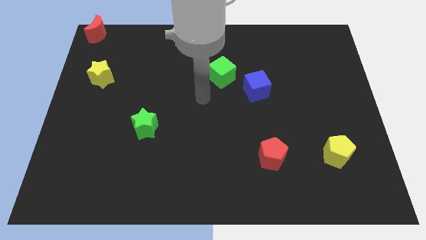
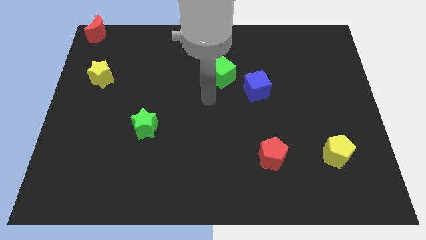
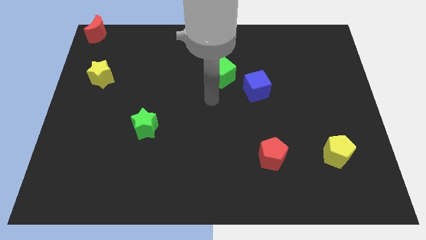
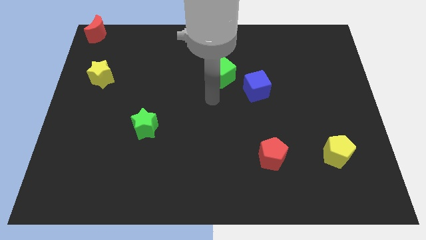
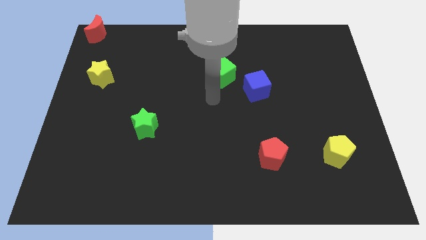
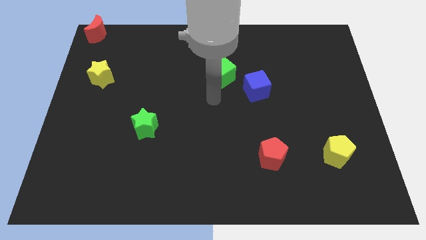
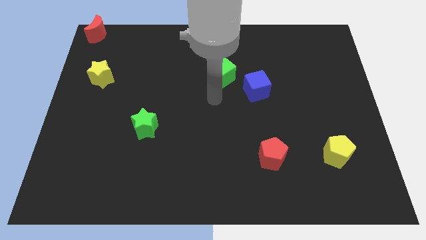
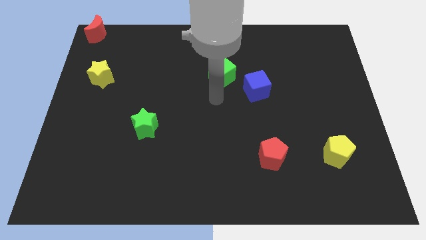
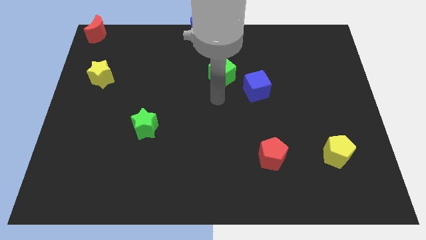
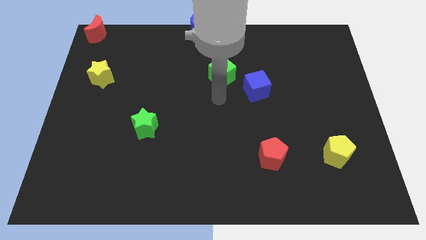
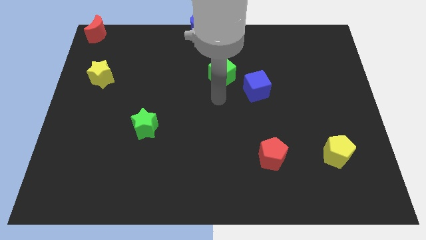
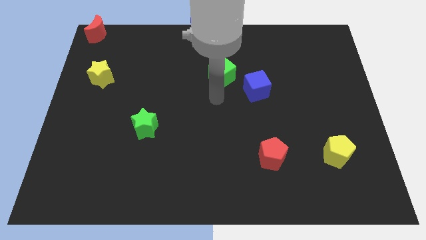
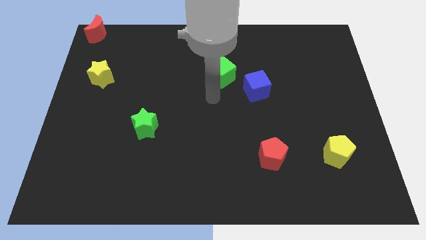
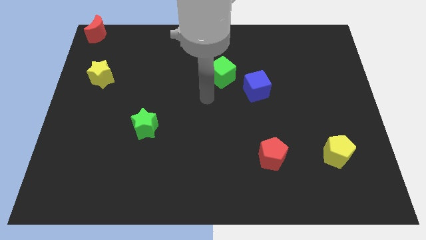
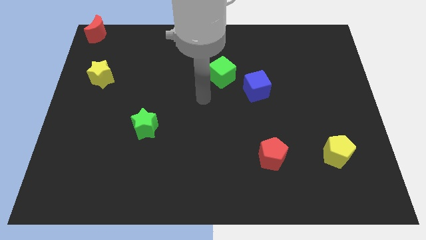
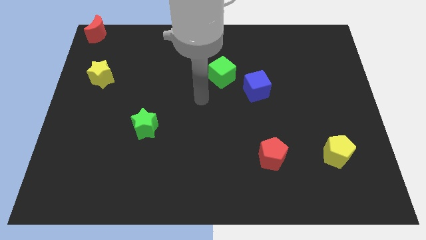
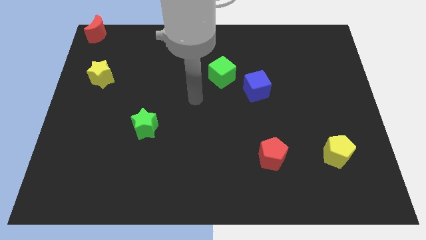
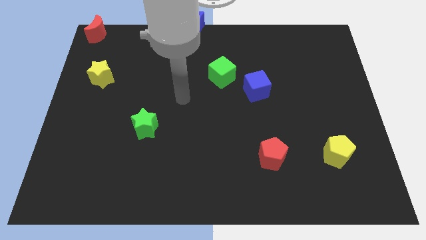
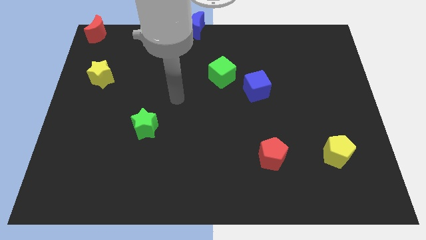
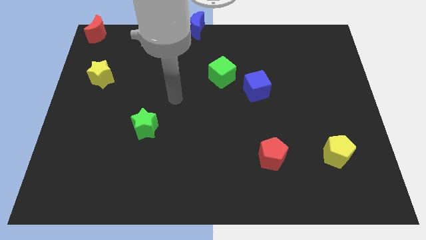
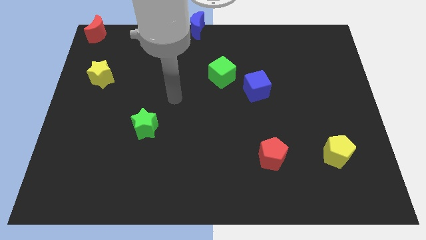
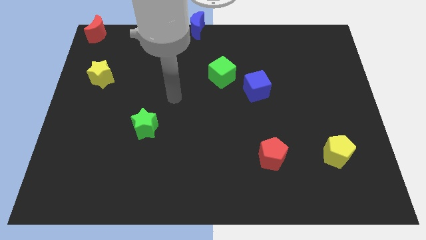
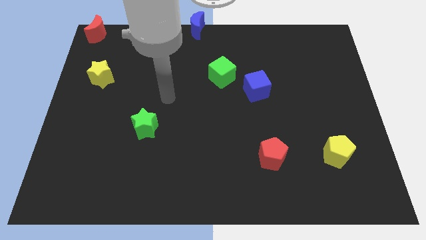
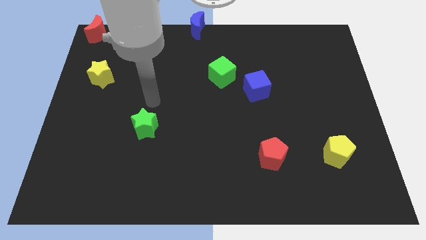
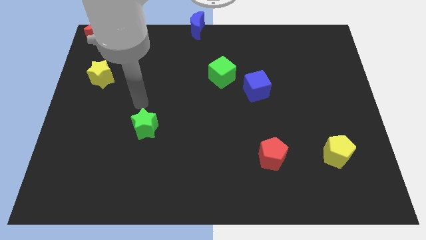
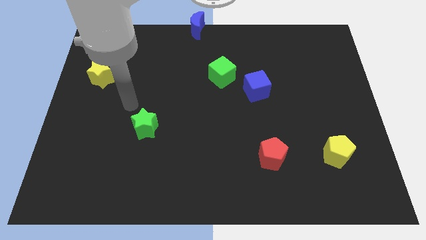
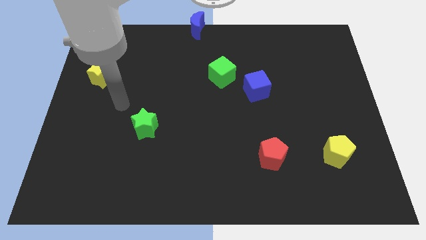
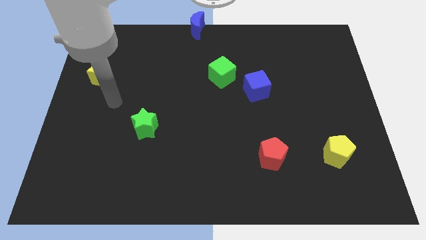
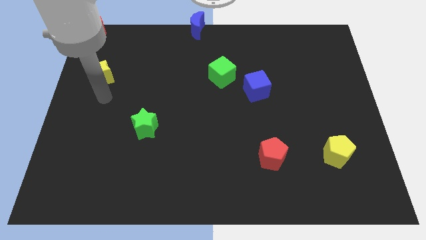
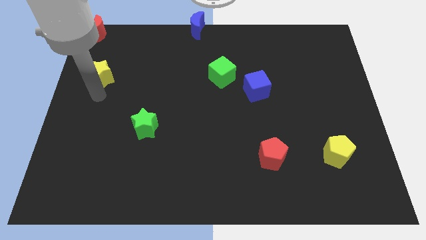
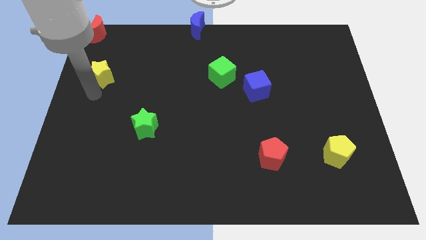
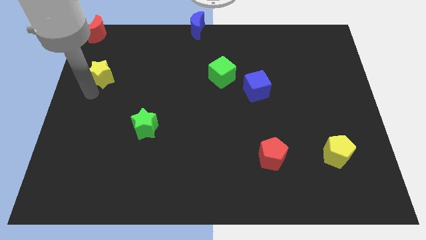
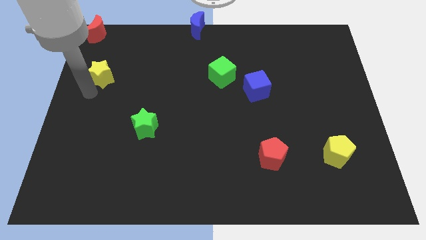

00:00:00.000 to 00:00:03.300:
place your arm below yellow star

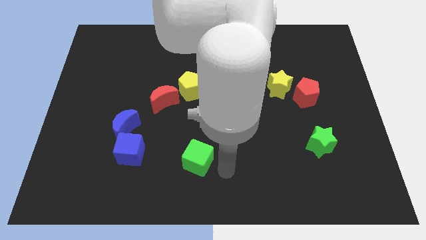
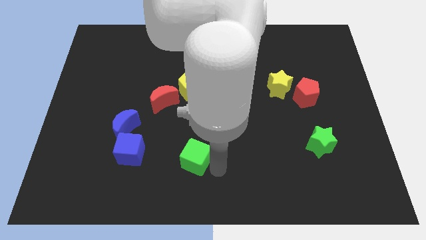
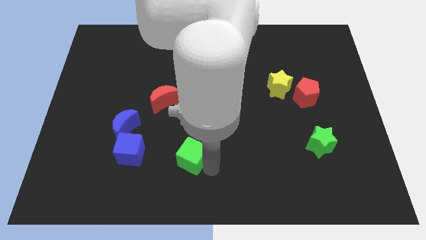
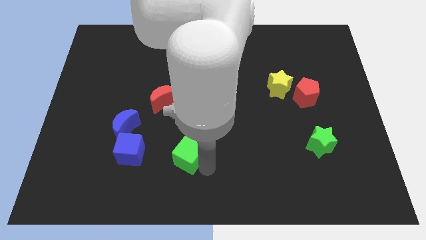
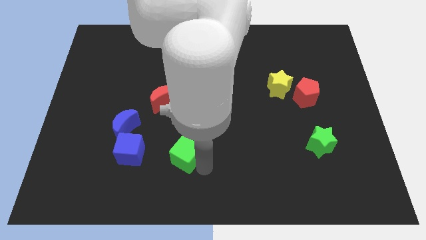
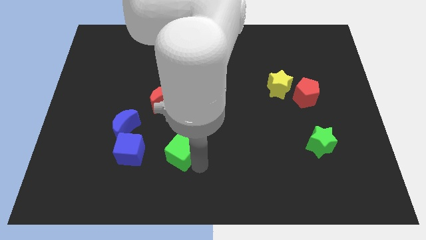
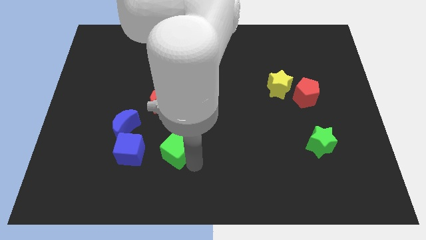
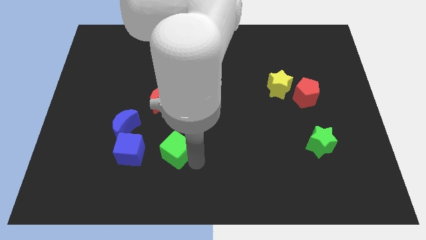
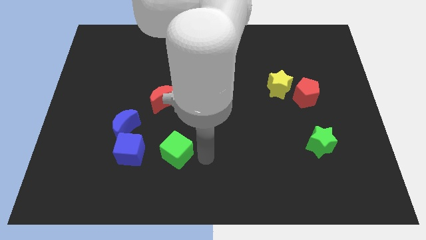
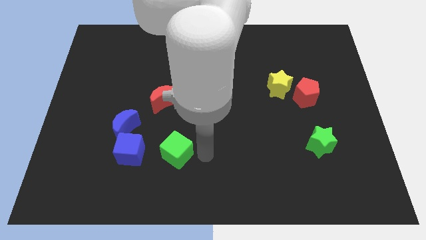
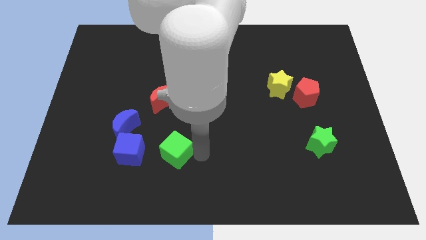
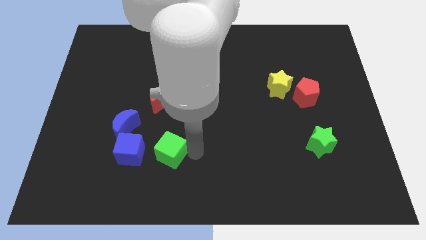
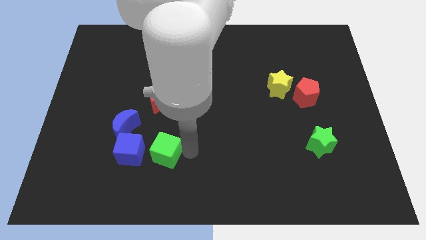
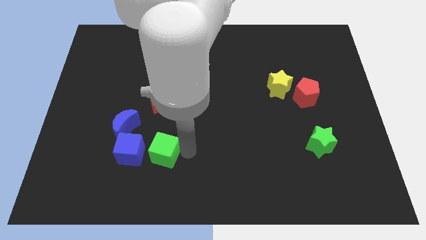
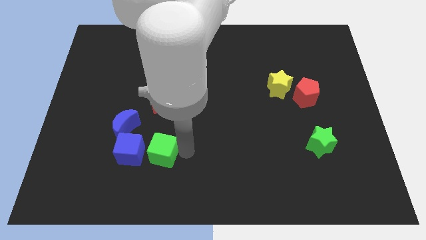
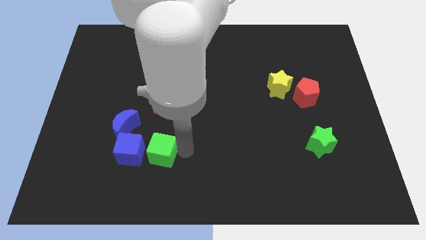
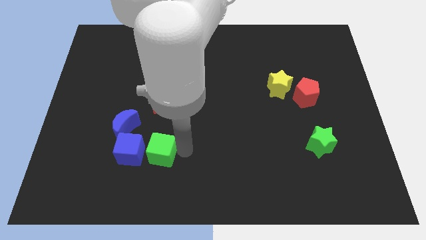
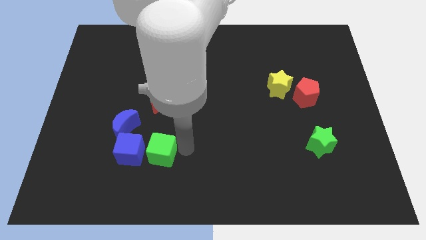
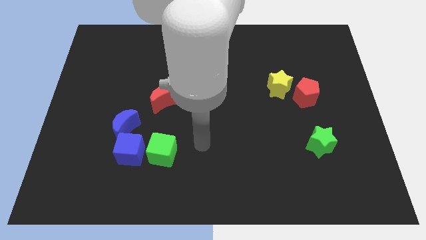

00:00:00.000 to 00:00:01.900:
move the green cube close to the blue cube

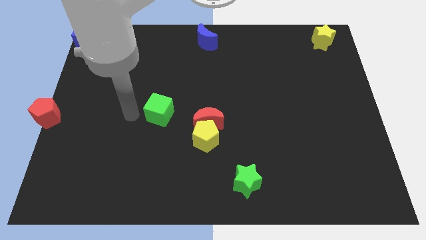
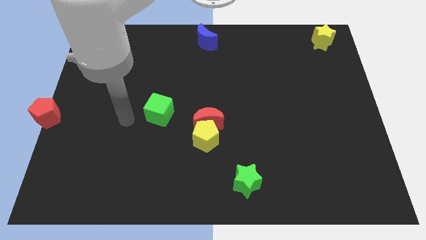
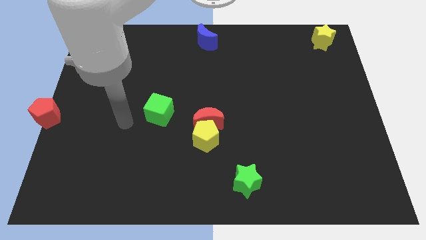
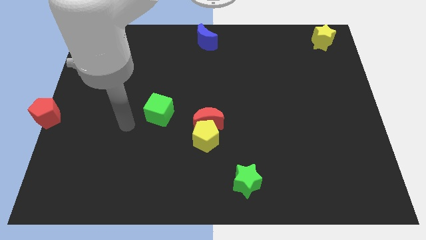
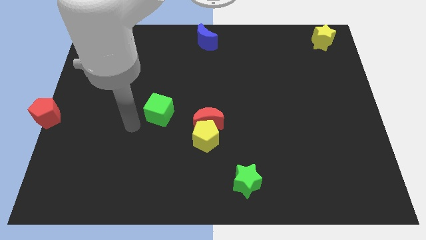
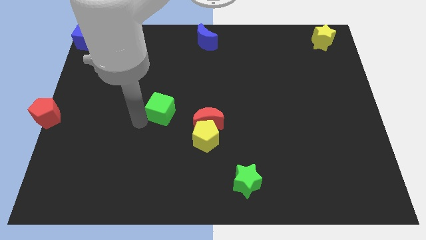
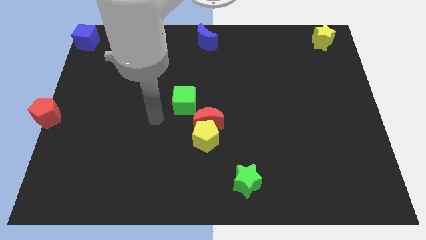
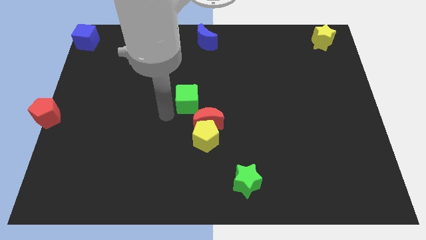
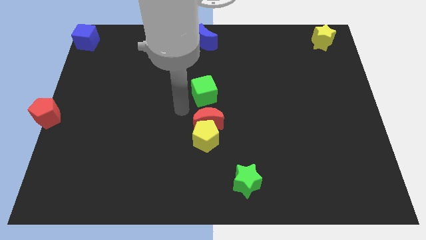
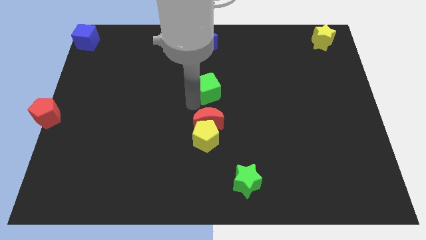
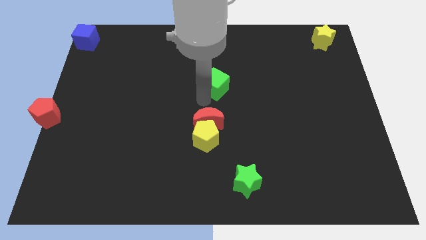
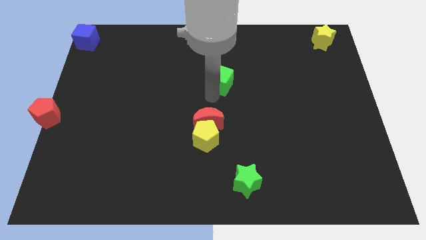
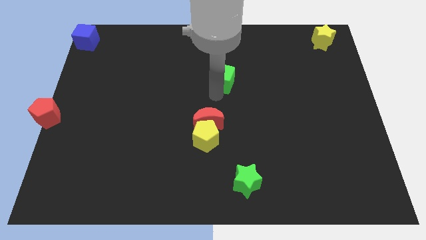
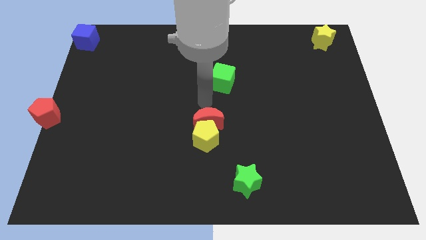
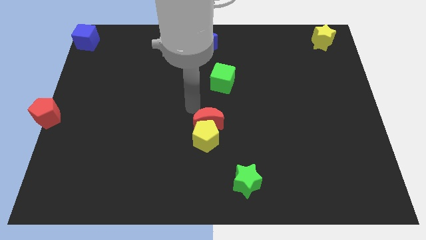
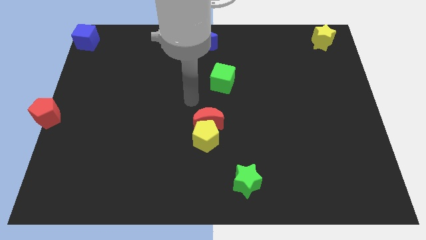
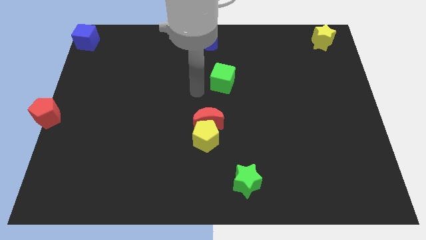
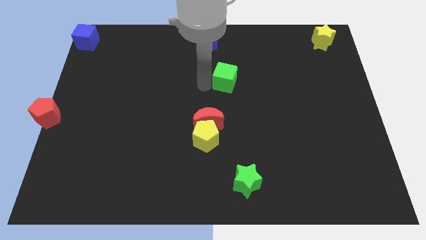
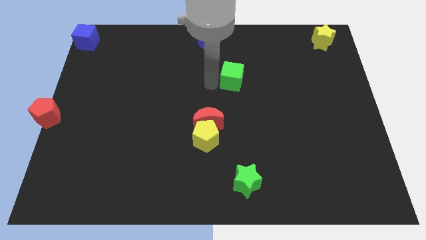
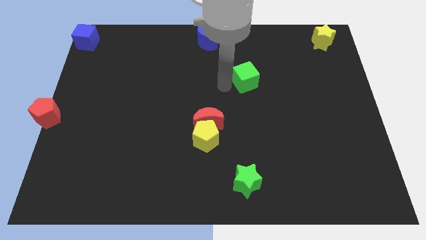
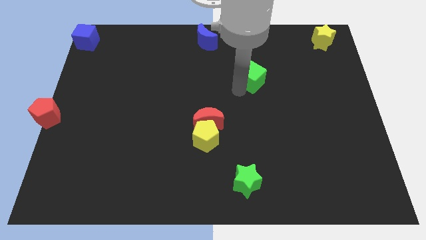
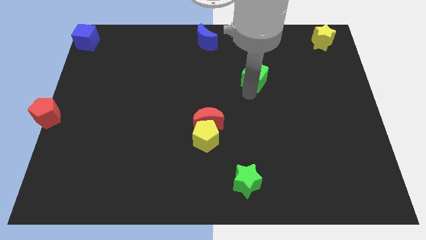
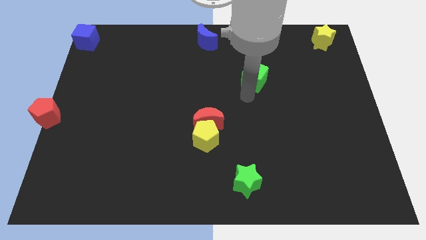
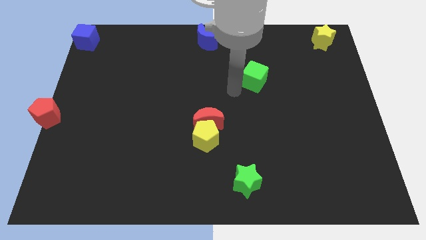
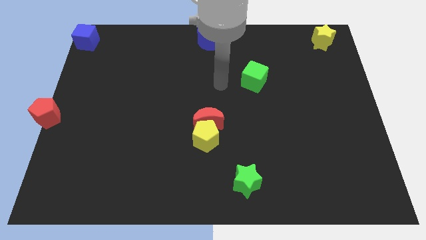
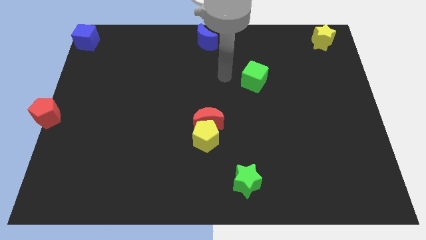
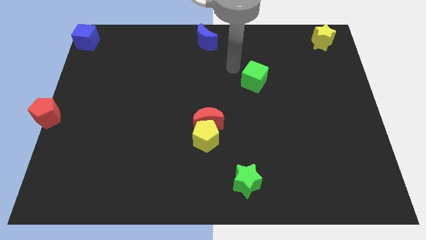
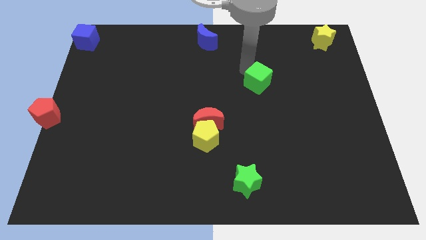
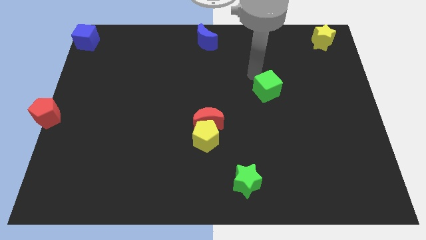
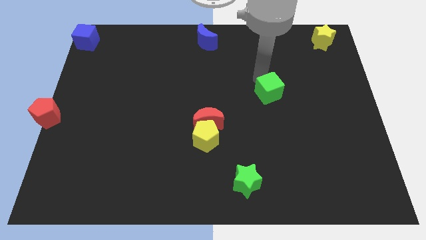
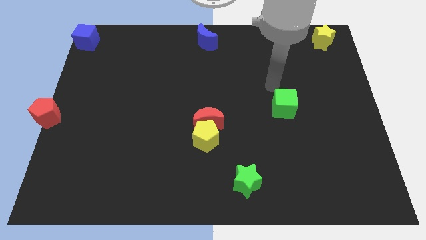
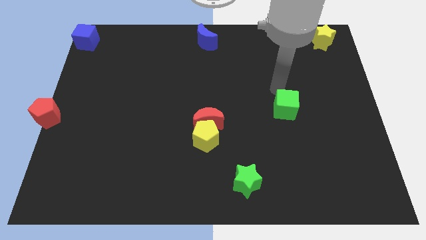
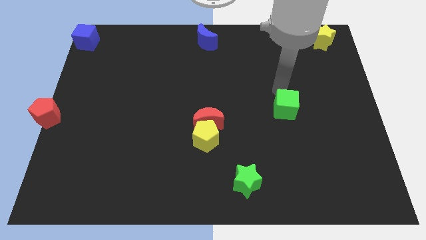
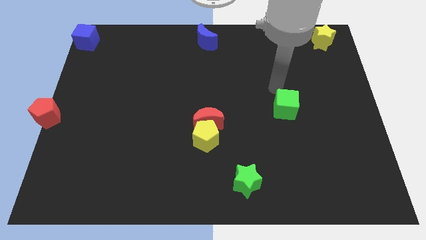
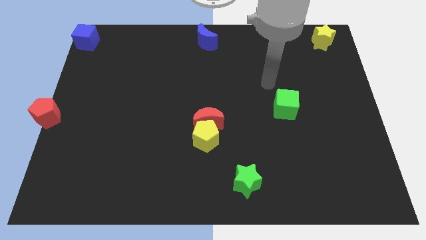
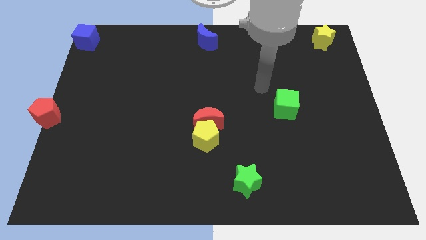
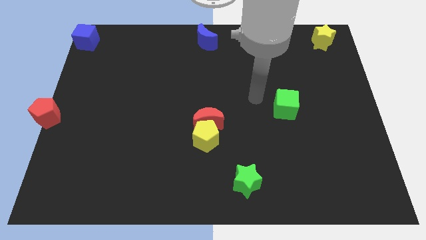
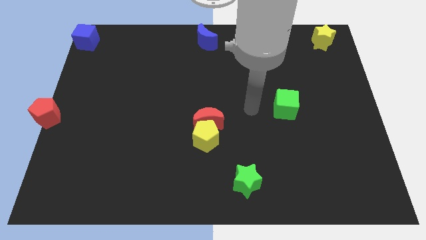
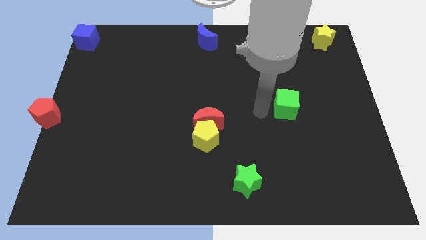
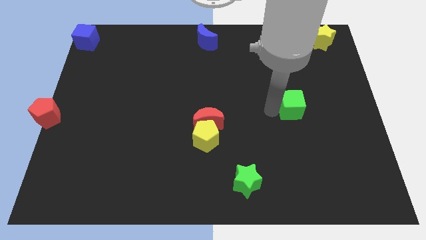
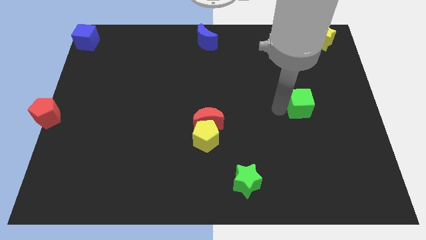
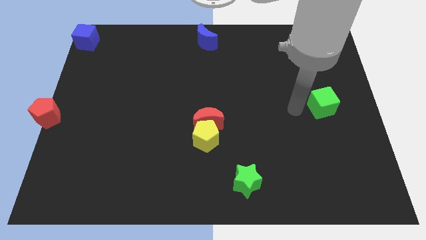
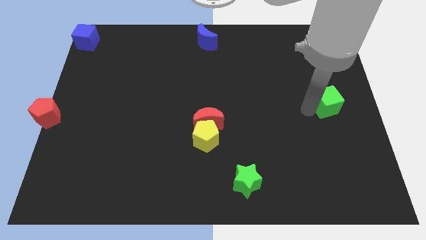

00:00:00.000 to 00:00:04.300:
move the green cube to the right of the board
